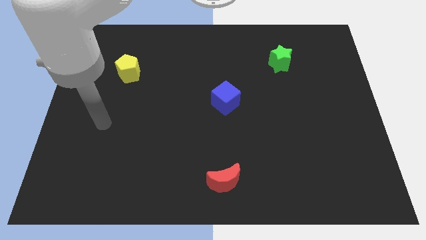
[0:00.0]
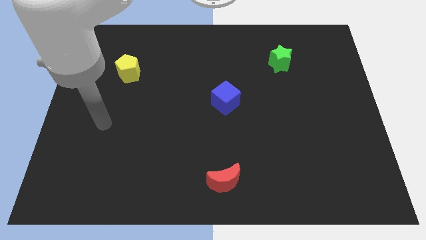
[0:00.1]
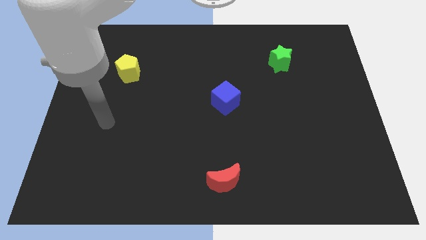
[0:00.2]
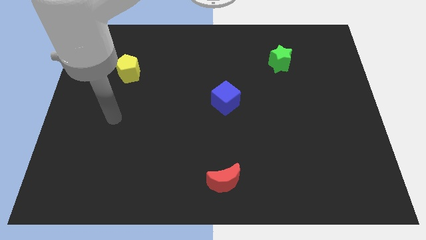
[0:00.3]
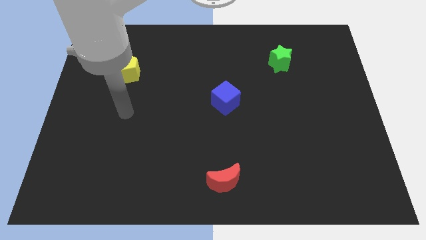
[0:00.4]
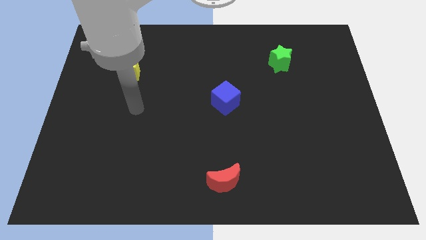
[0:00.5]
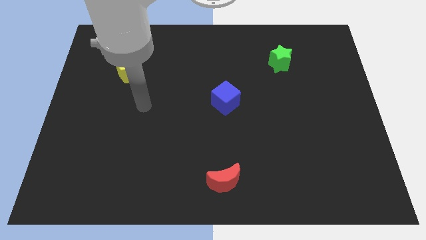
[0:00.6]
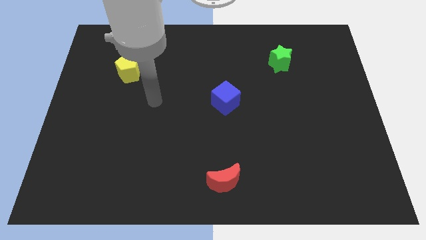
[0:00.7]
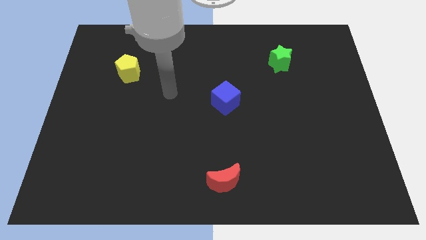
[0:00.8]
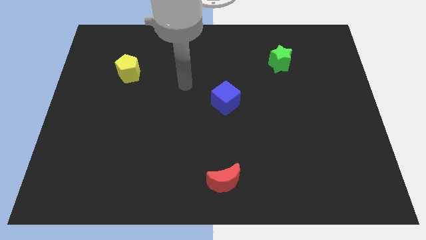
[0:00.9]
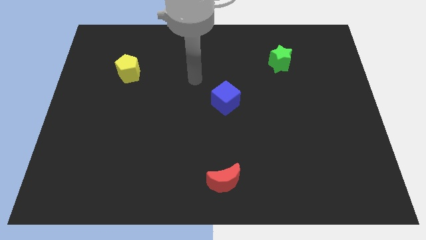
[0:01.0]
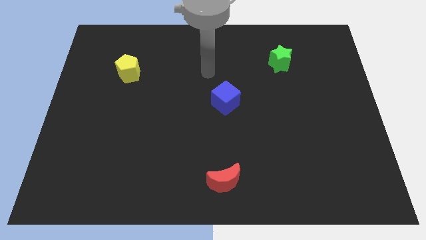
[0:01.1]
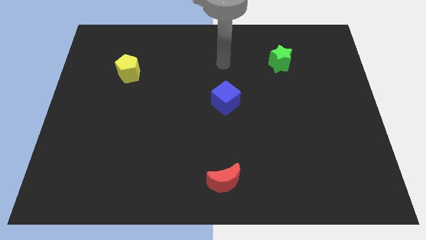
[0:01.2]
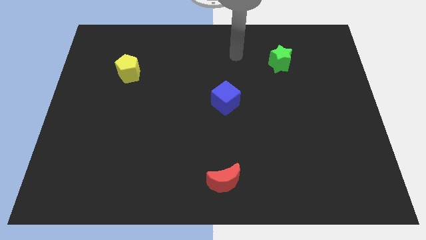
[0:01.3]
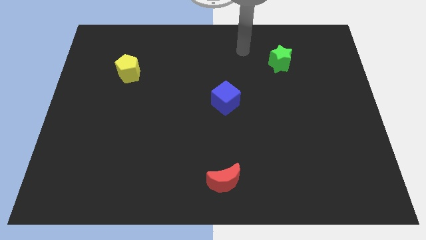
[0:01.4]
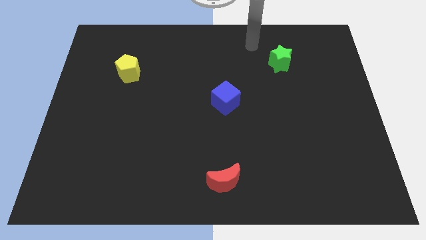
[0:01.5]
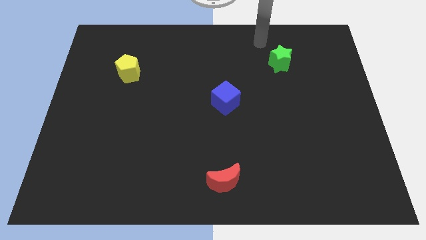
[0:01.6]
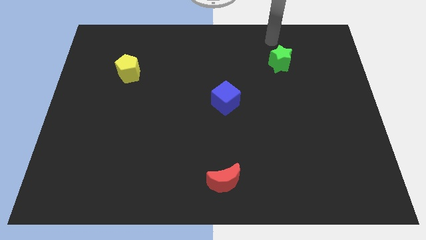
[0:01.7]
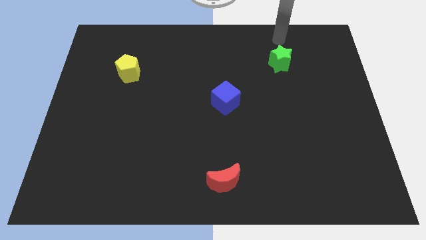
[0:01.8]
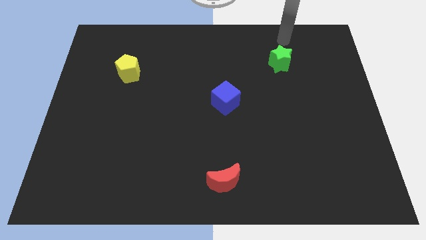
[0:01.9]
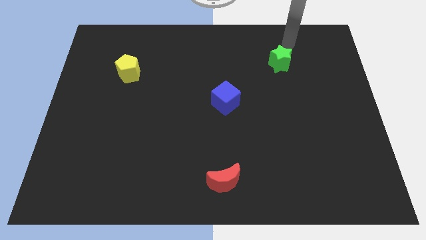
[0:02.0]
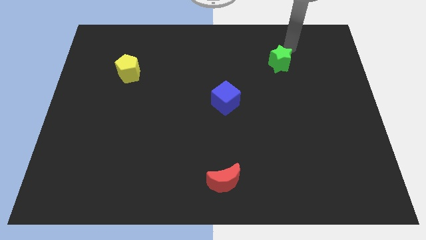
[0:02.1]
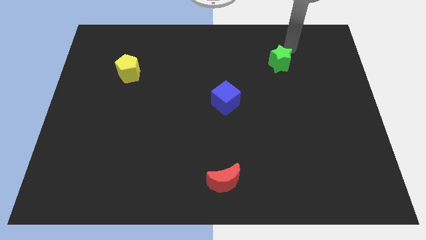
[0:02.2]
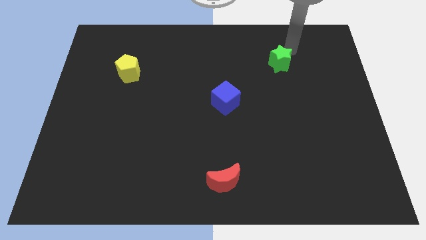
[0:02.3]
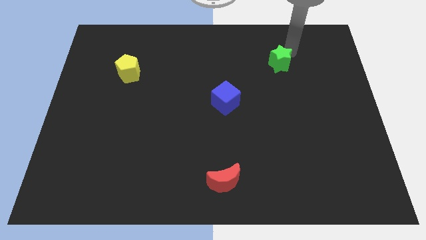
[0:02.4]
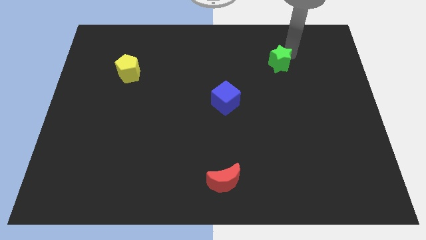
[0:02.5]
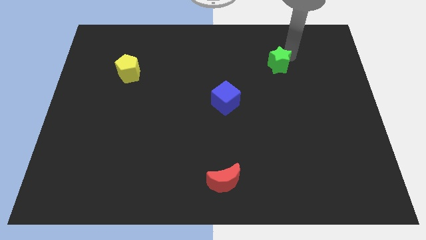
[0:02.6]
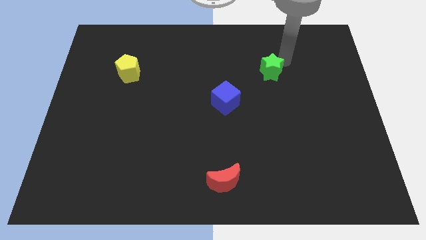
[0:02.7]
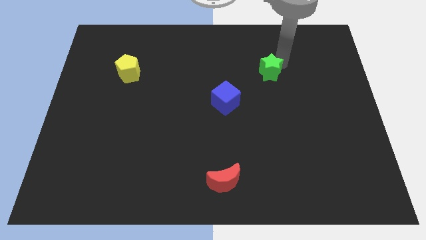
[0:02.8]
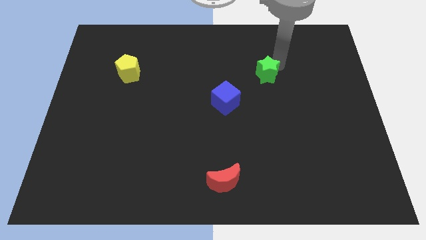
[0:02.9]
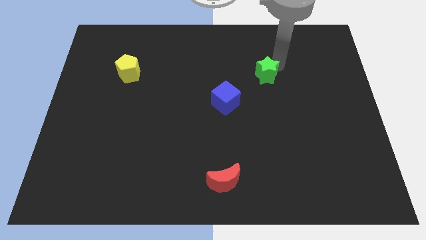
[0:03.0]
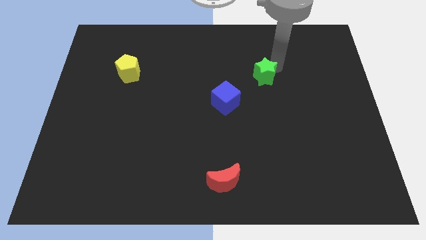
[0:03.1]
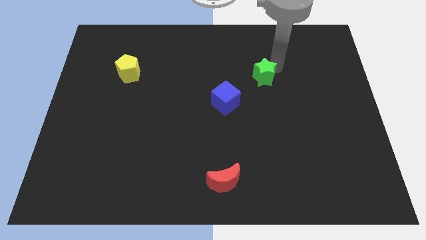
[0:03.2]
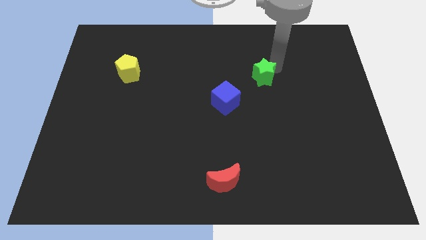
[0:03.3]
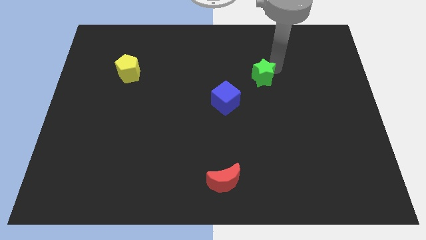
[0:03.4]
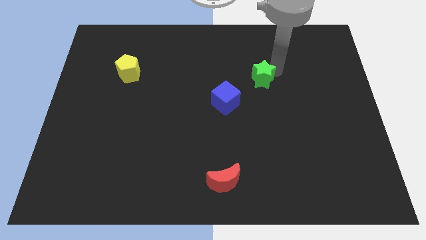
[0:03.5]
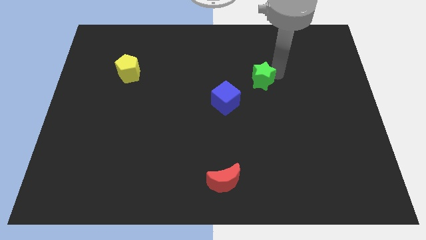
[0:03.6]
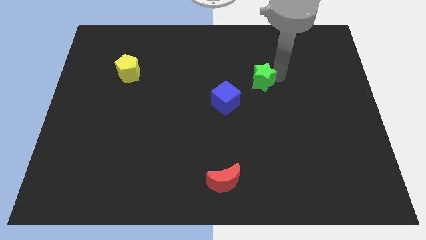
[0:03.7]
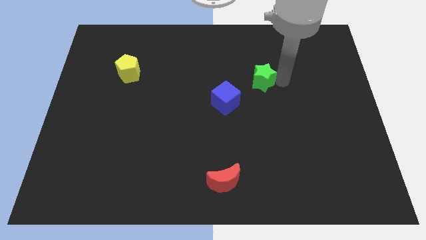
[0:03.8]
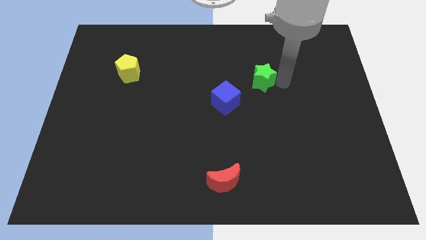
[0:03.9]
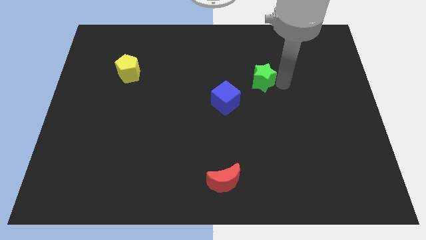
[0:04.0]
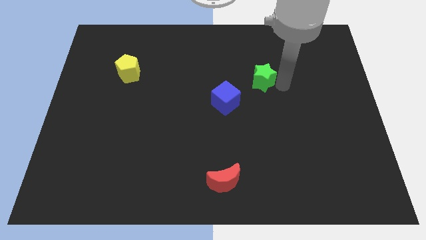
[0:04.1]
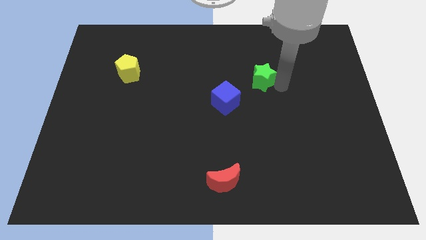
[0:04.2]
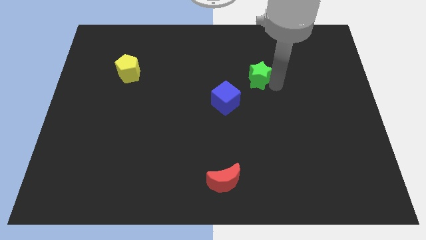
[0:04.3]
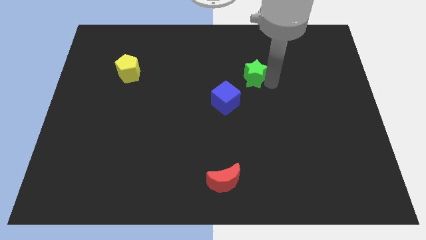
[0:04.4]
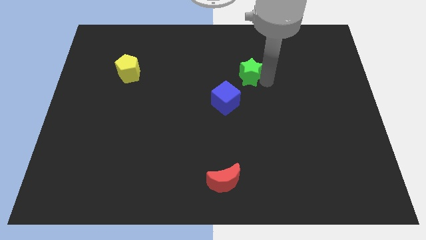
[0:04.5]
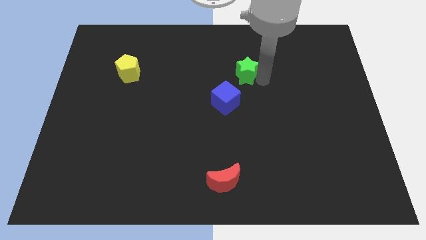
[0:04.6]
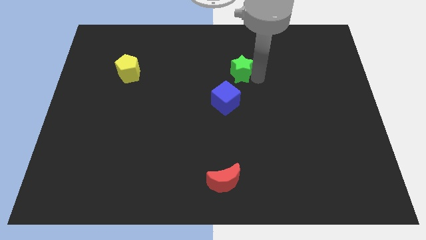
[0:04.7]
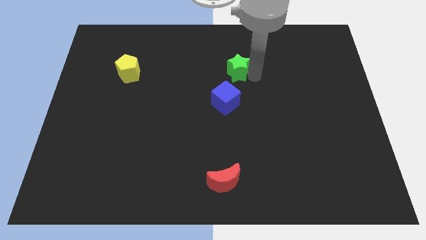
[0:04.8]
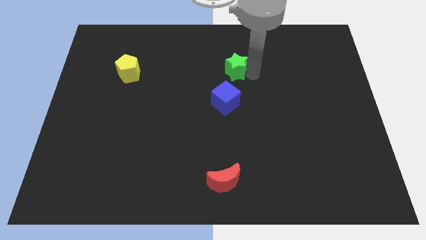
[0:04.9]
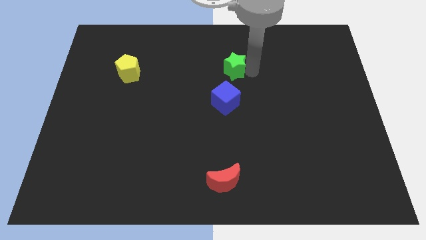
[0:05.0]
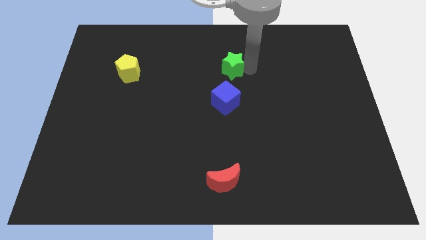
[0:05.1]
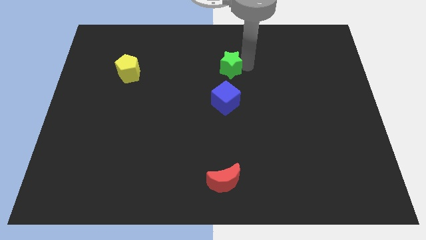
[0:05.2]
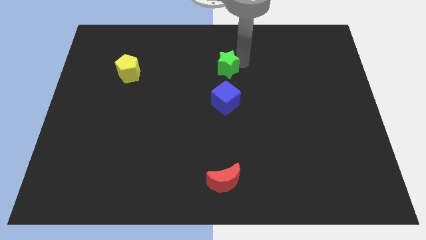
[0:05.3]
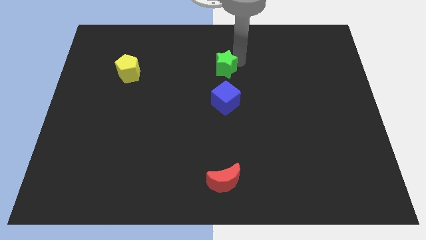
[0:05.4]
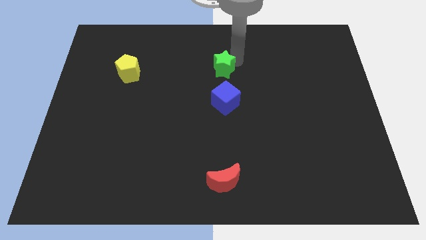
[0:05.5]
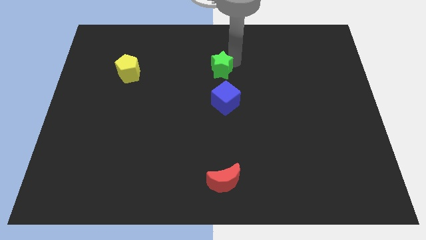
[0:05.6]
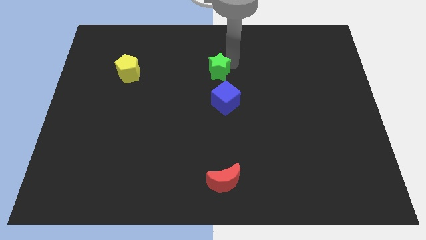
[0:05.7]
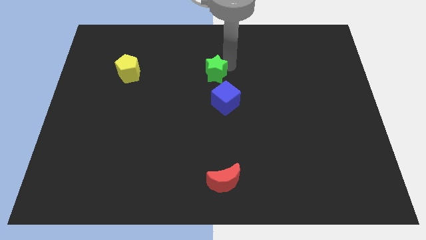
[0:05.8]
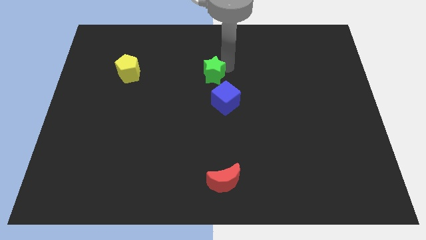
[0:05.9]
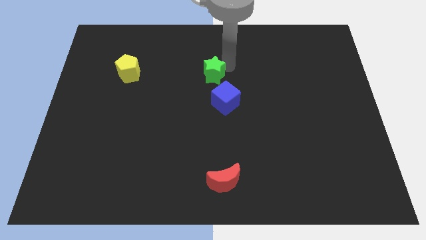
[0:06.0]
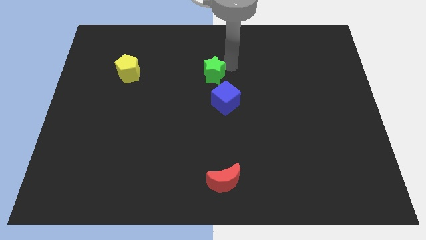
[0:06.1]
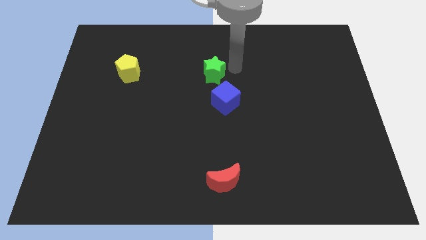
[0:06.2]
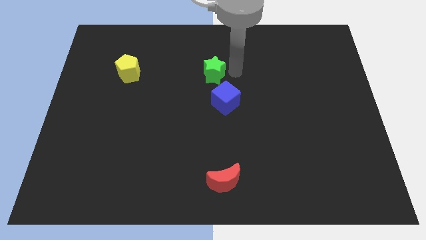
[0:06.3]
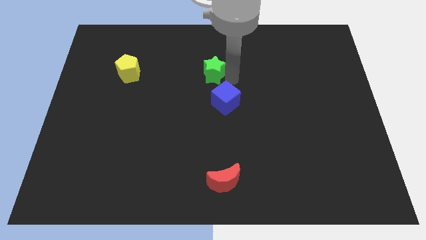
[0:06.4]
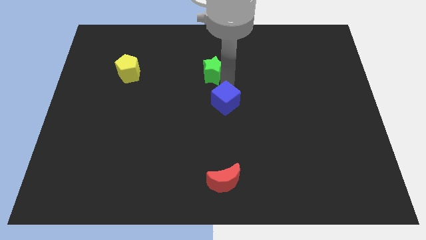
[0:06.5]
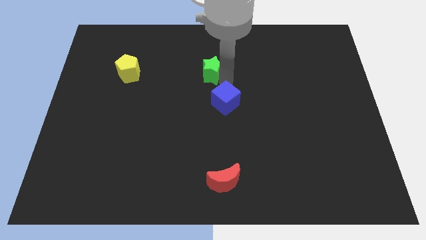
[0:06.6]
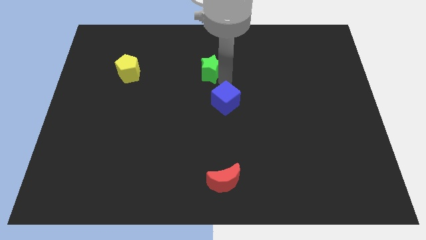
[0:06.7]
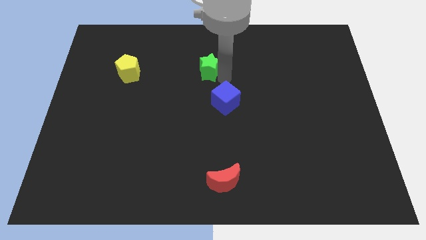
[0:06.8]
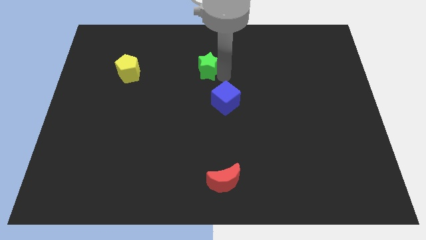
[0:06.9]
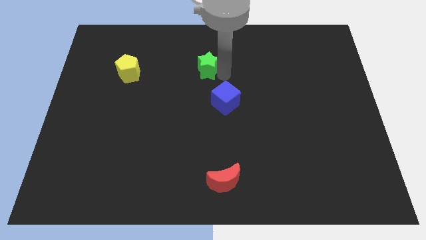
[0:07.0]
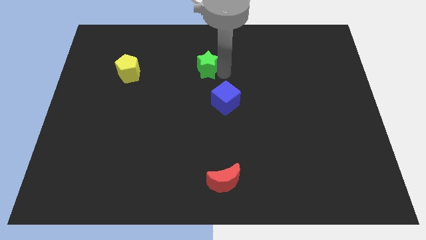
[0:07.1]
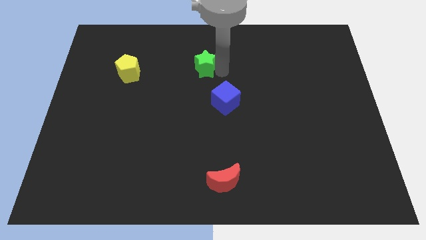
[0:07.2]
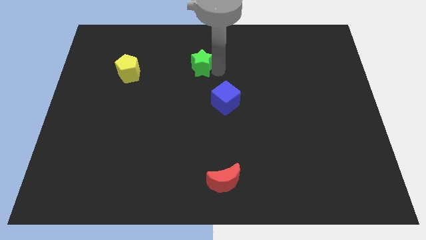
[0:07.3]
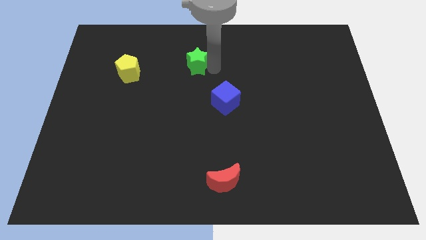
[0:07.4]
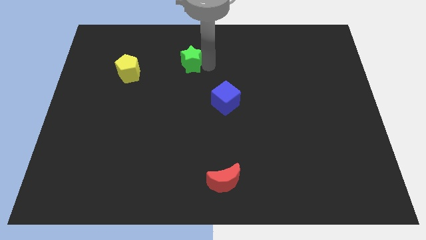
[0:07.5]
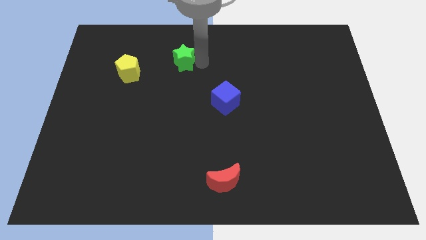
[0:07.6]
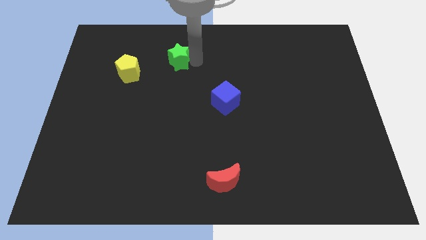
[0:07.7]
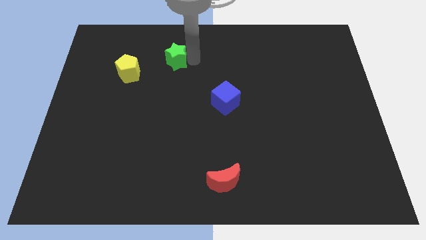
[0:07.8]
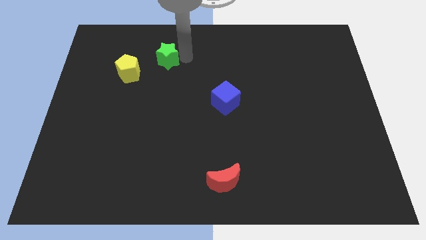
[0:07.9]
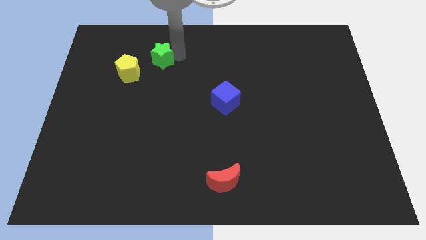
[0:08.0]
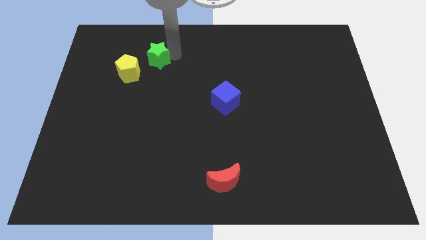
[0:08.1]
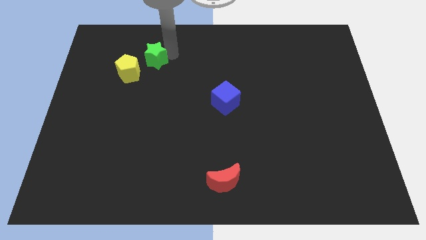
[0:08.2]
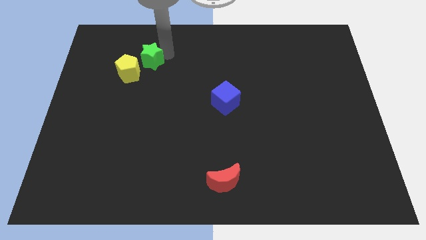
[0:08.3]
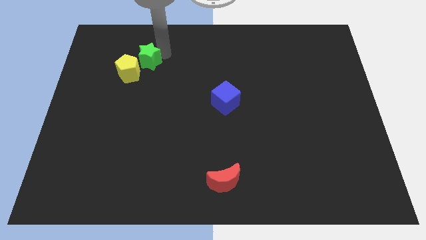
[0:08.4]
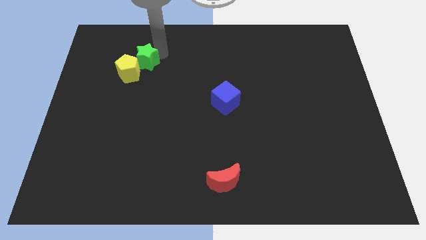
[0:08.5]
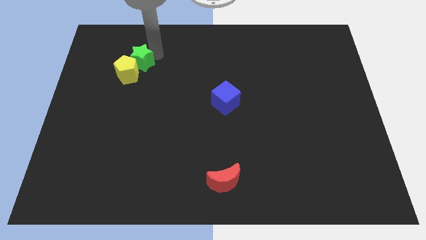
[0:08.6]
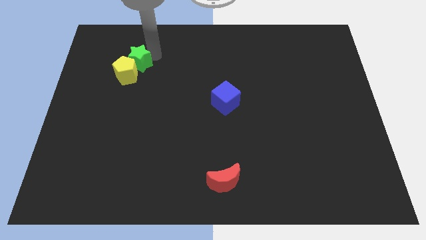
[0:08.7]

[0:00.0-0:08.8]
push the green block next to the pentagon

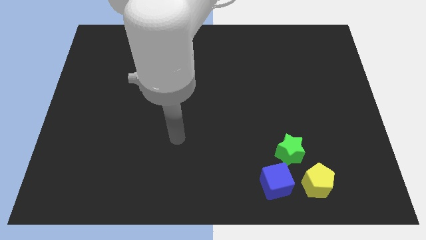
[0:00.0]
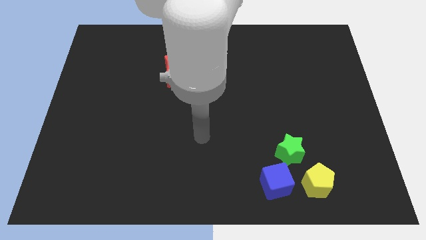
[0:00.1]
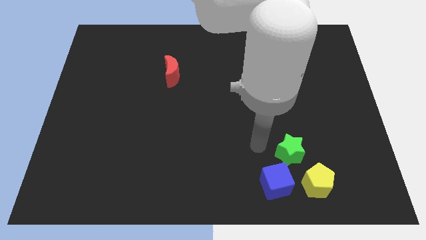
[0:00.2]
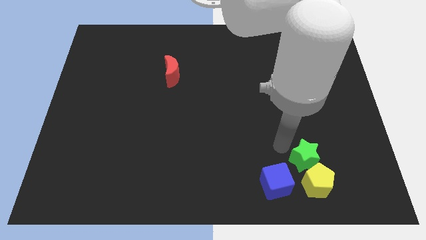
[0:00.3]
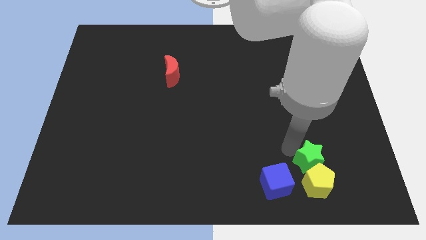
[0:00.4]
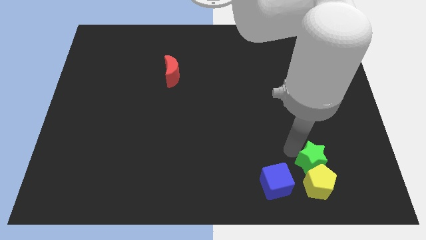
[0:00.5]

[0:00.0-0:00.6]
slide the green block close to the yellow pentagon
